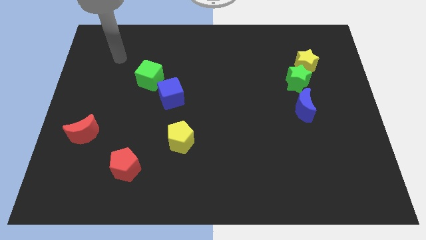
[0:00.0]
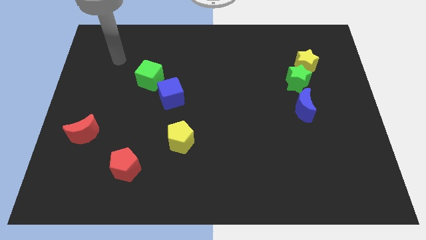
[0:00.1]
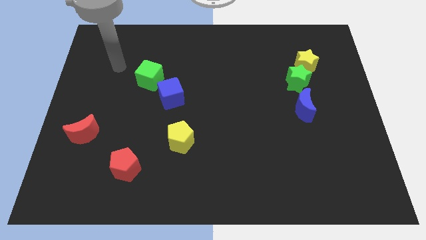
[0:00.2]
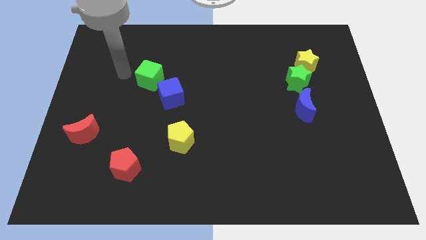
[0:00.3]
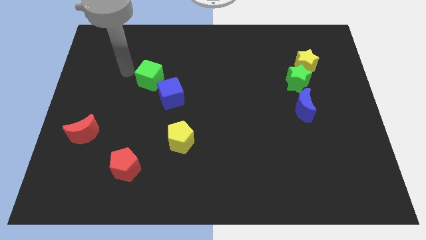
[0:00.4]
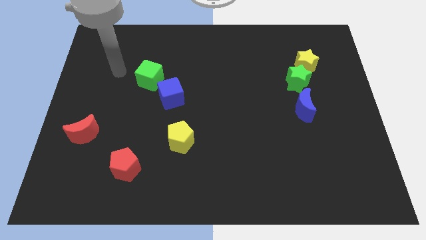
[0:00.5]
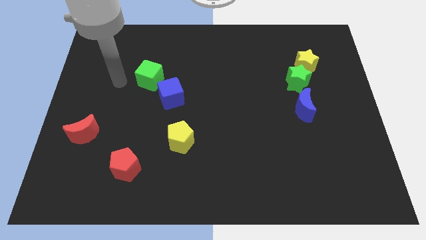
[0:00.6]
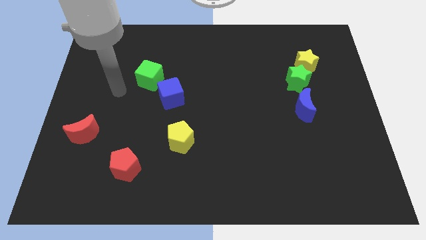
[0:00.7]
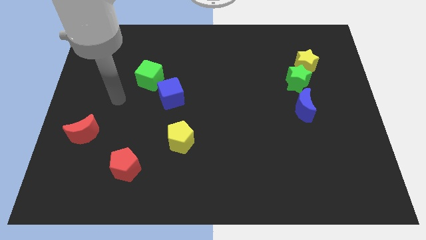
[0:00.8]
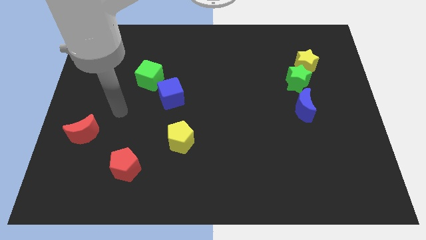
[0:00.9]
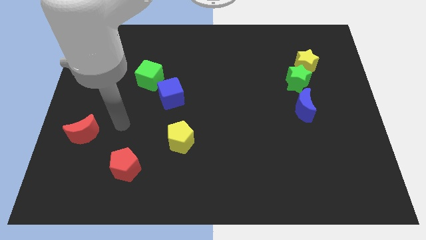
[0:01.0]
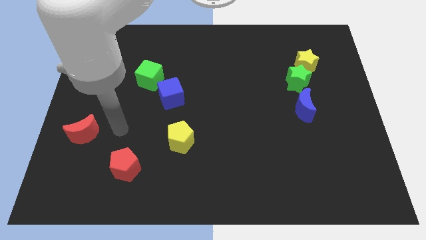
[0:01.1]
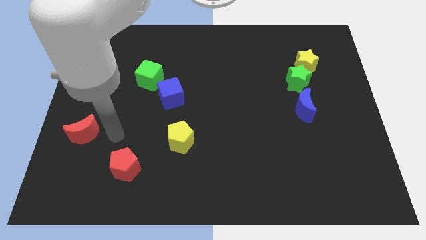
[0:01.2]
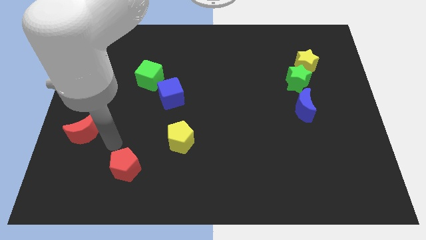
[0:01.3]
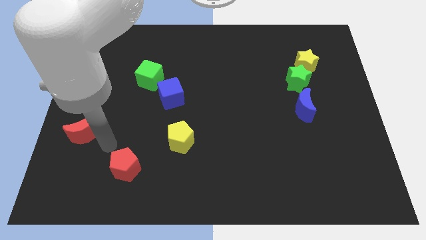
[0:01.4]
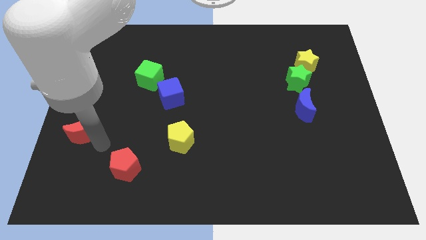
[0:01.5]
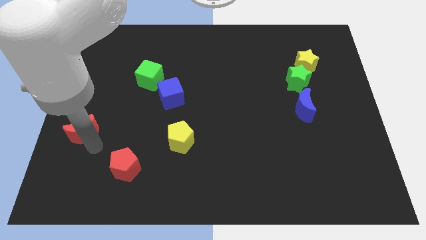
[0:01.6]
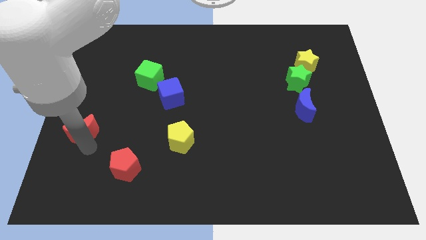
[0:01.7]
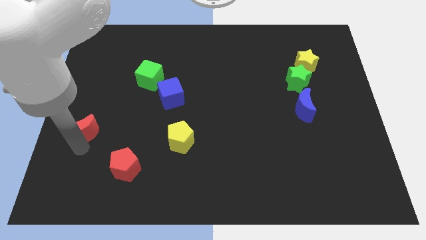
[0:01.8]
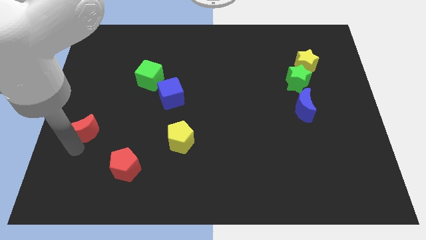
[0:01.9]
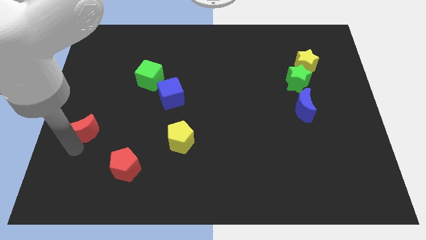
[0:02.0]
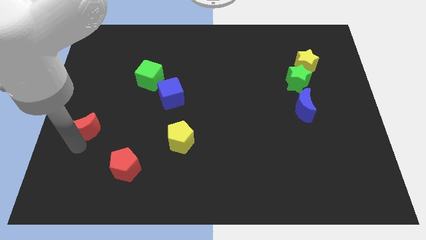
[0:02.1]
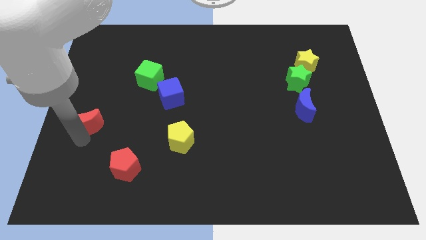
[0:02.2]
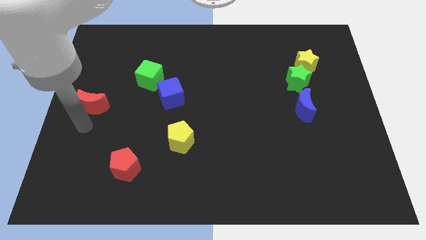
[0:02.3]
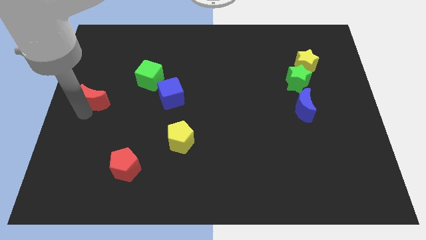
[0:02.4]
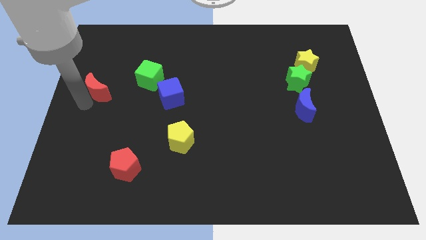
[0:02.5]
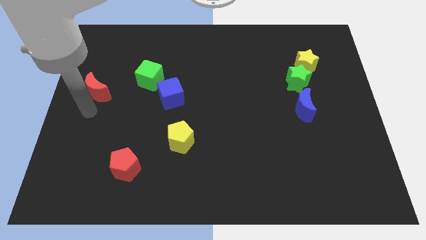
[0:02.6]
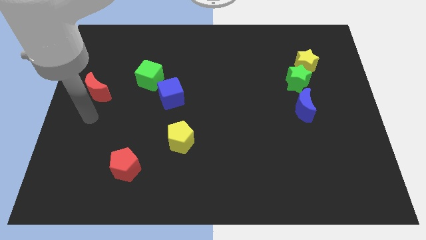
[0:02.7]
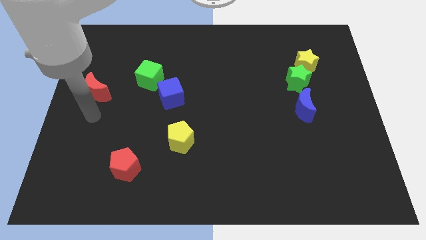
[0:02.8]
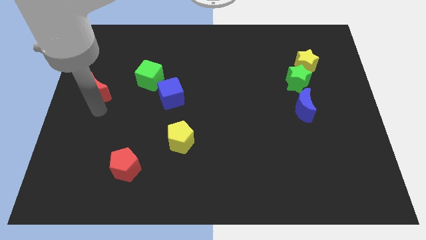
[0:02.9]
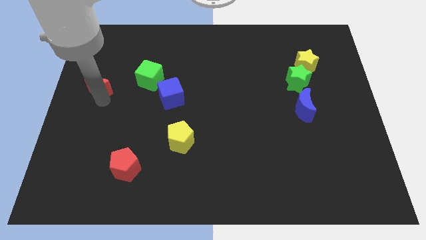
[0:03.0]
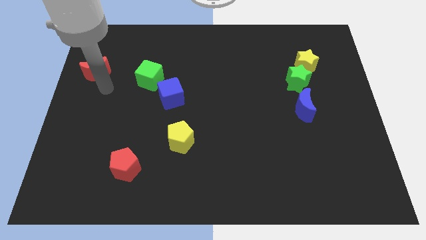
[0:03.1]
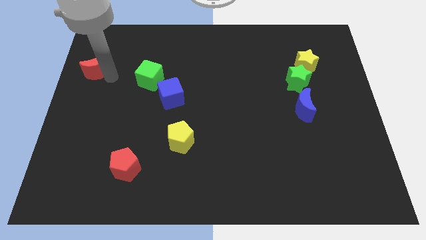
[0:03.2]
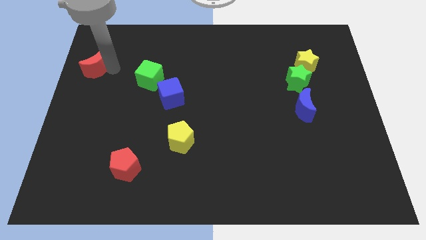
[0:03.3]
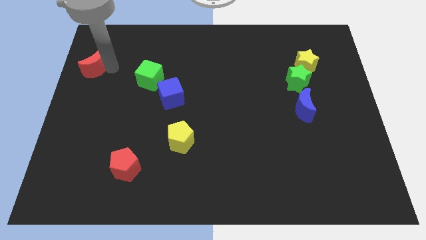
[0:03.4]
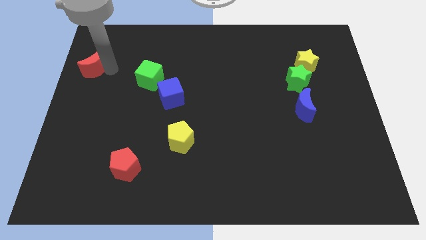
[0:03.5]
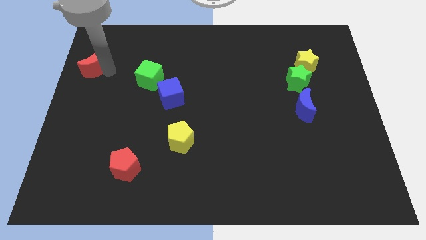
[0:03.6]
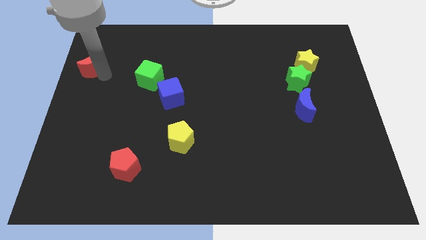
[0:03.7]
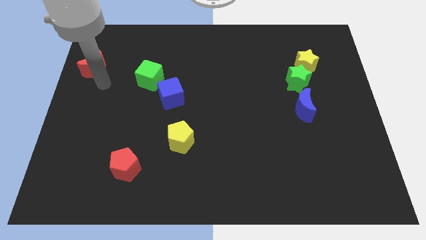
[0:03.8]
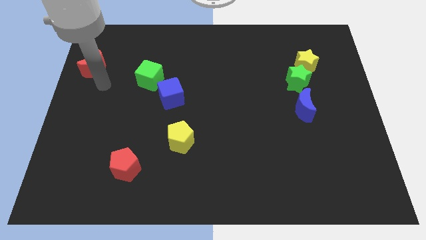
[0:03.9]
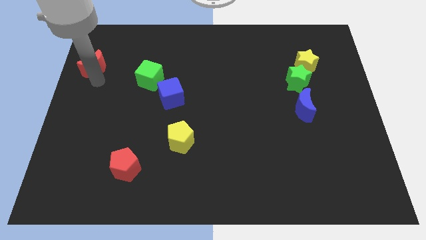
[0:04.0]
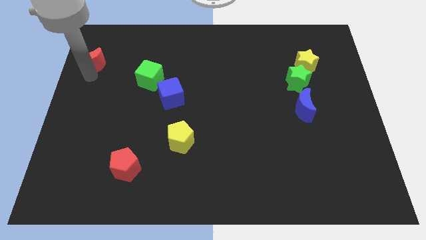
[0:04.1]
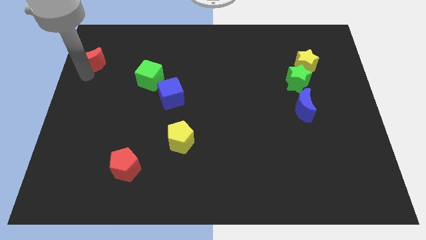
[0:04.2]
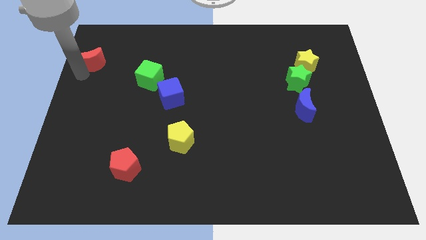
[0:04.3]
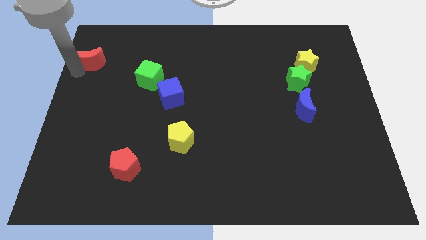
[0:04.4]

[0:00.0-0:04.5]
move the red moon towards the top of the board

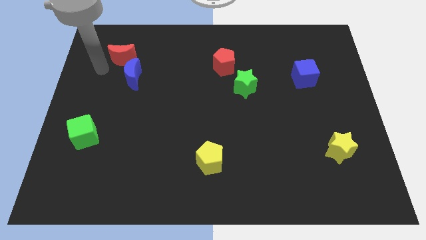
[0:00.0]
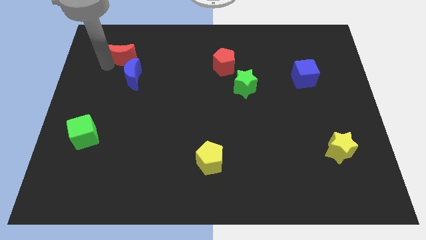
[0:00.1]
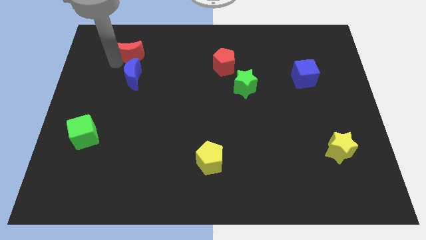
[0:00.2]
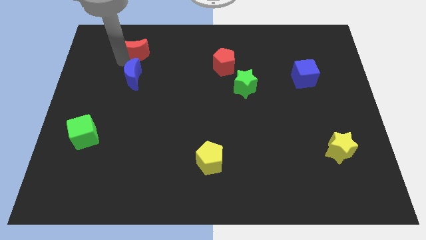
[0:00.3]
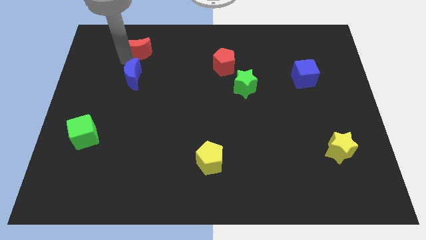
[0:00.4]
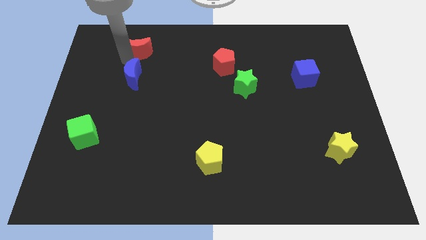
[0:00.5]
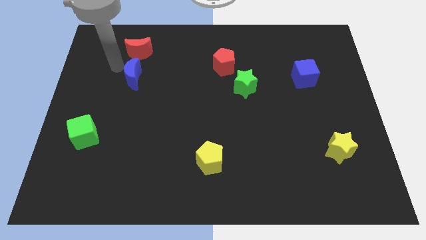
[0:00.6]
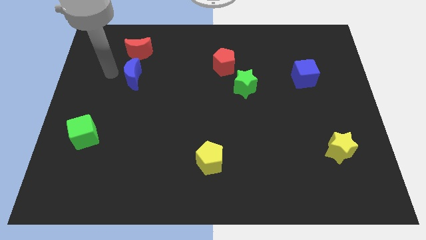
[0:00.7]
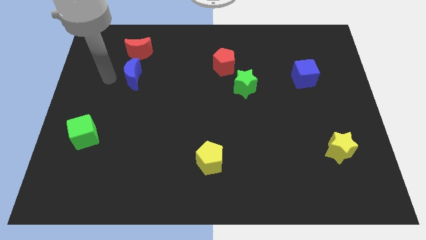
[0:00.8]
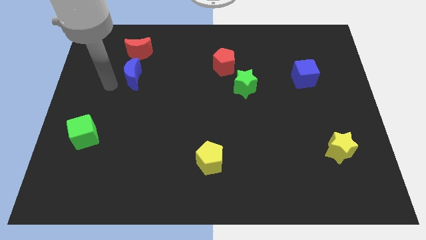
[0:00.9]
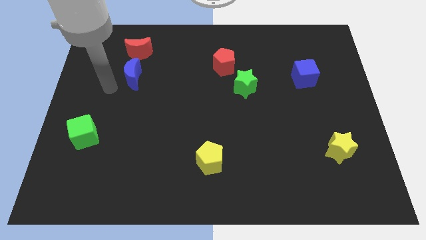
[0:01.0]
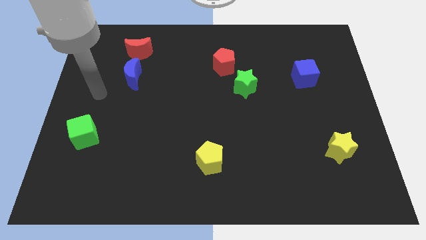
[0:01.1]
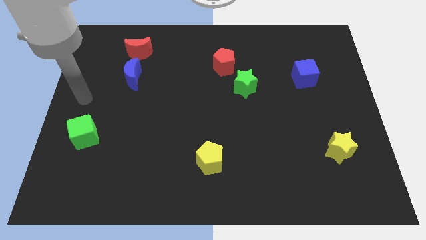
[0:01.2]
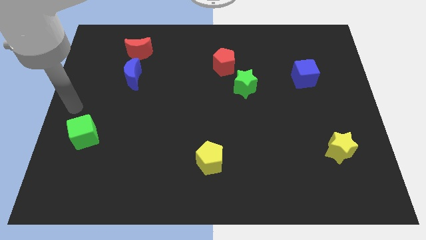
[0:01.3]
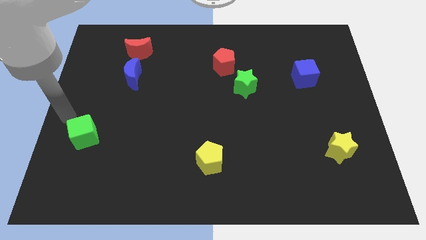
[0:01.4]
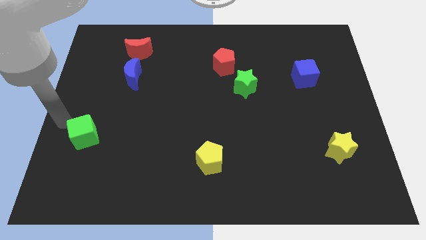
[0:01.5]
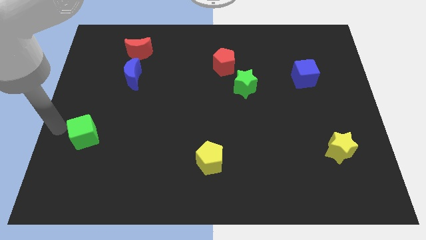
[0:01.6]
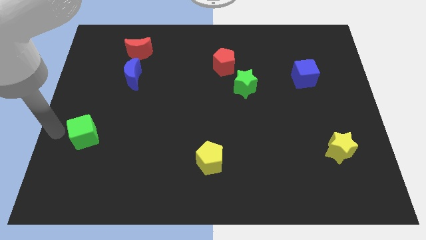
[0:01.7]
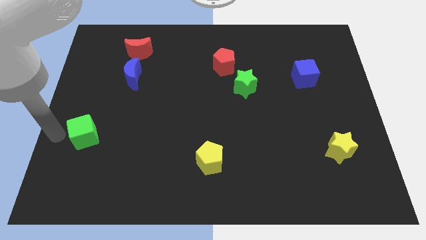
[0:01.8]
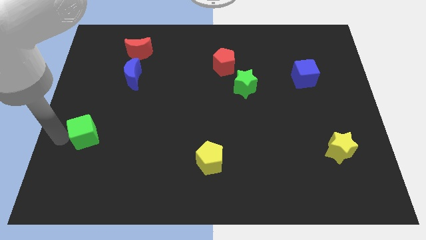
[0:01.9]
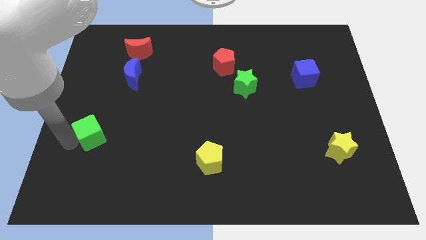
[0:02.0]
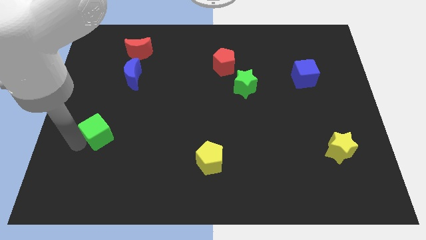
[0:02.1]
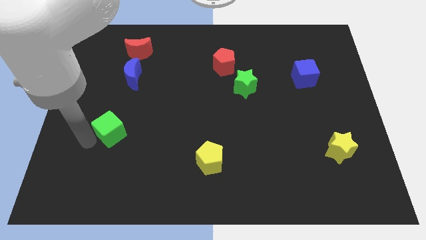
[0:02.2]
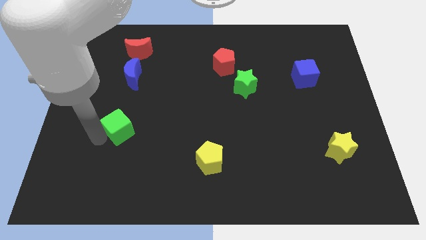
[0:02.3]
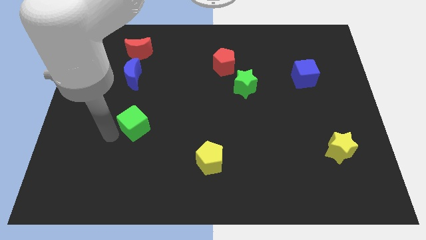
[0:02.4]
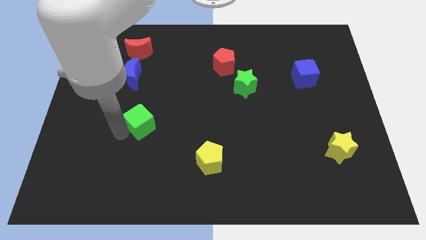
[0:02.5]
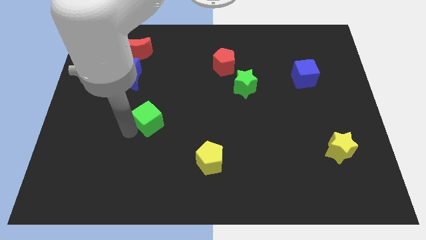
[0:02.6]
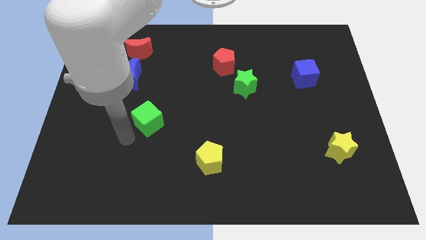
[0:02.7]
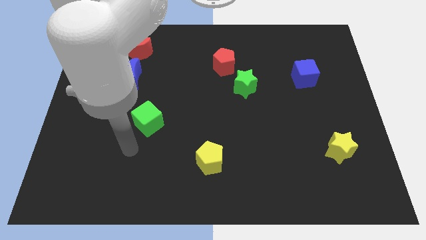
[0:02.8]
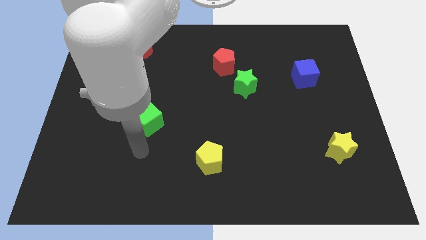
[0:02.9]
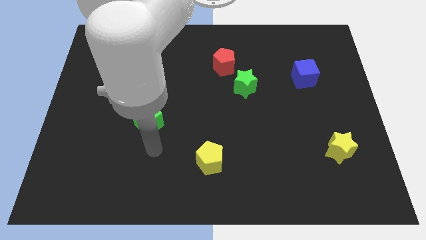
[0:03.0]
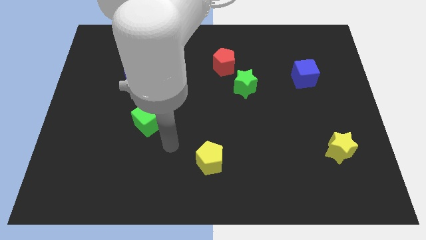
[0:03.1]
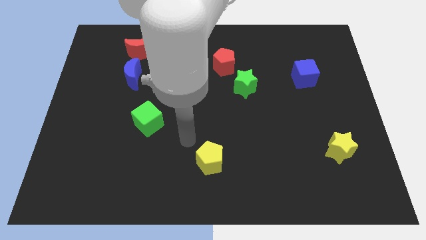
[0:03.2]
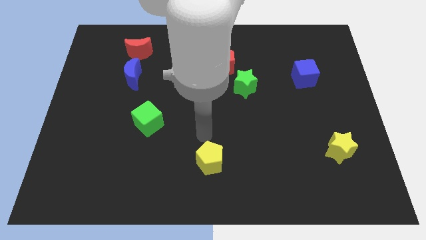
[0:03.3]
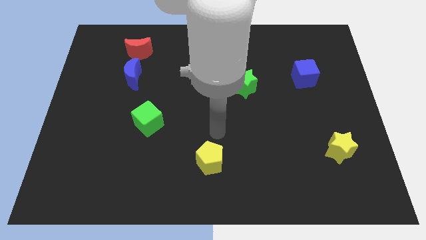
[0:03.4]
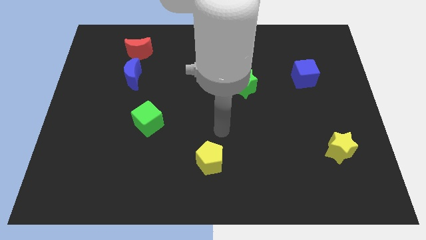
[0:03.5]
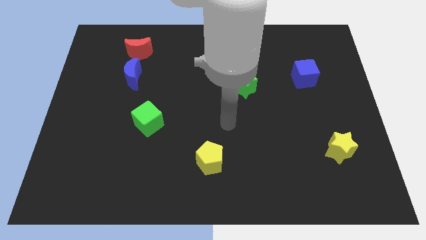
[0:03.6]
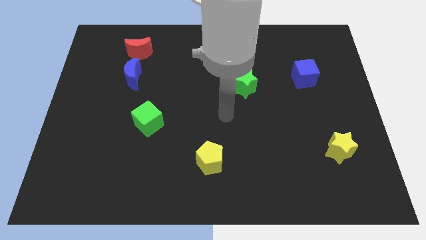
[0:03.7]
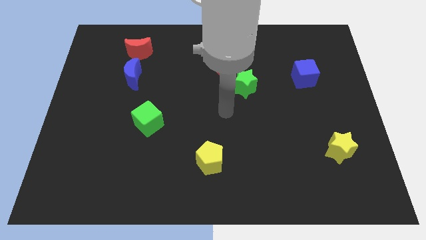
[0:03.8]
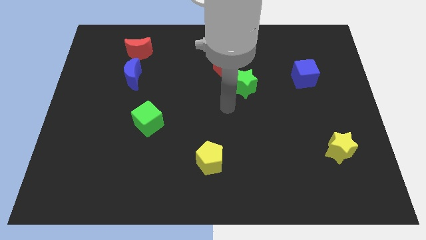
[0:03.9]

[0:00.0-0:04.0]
push the green cube underneath the blue moon

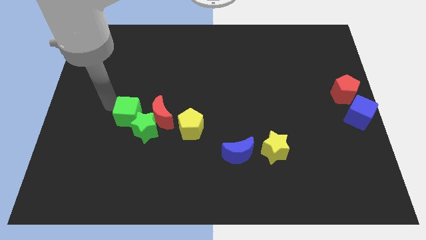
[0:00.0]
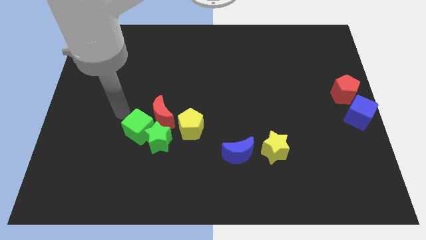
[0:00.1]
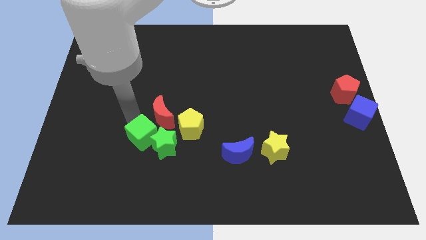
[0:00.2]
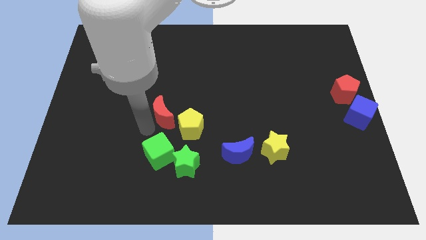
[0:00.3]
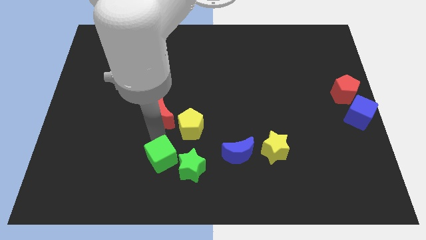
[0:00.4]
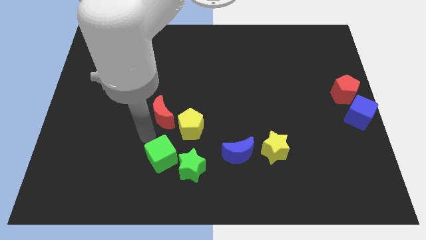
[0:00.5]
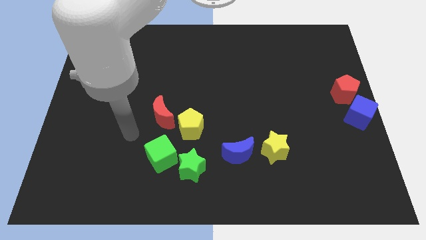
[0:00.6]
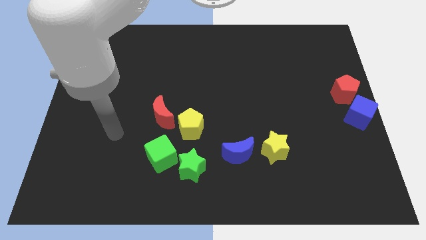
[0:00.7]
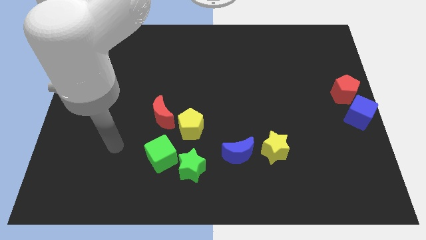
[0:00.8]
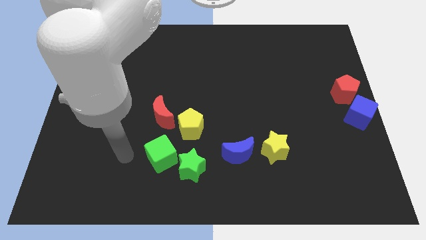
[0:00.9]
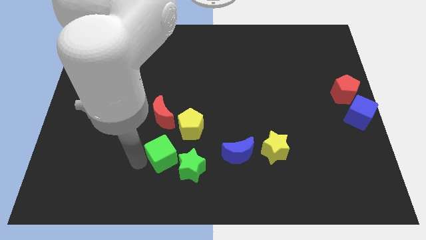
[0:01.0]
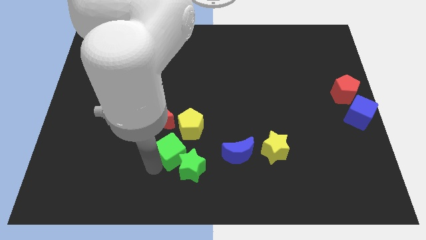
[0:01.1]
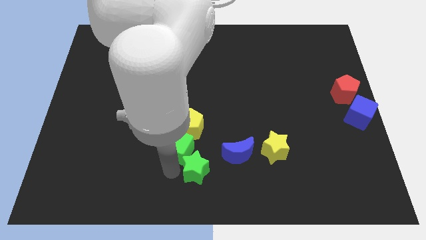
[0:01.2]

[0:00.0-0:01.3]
separate green blocks from red moon
